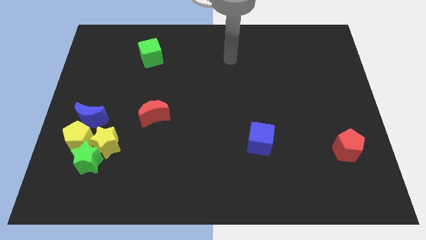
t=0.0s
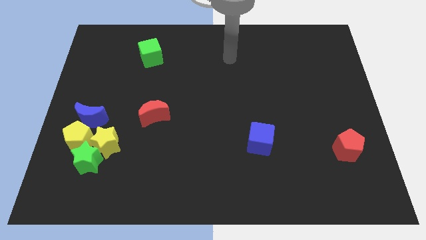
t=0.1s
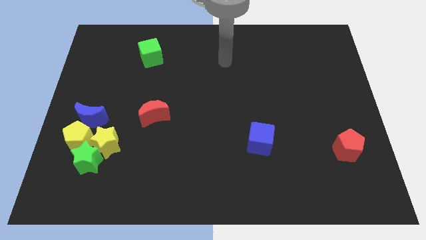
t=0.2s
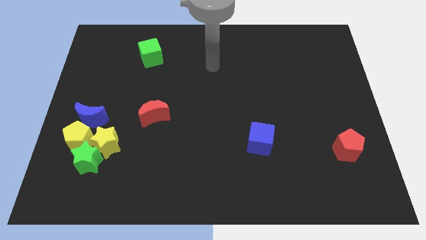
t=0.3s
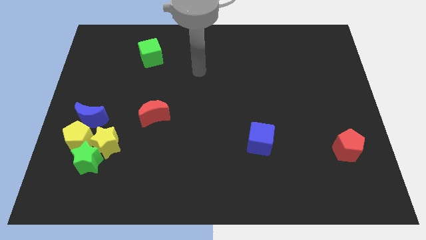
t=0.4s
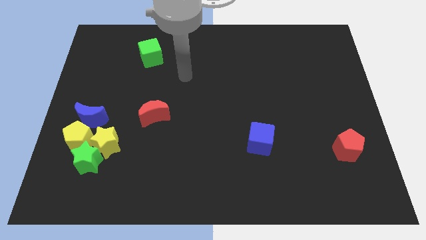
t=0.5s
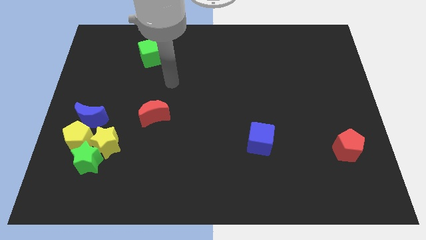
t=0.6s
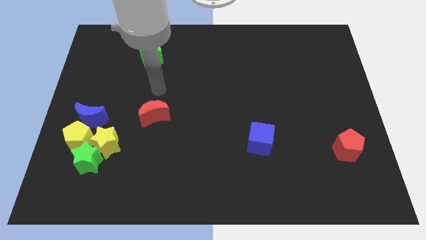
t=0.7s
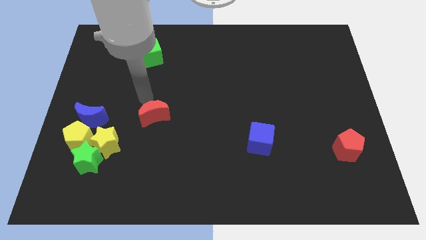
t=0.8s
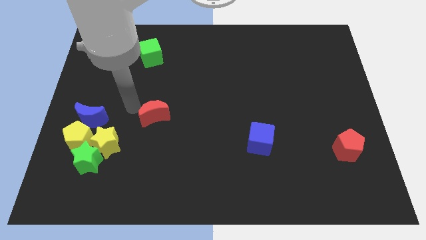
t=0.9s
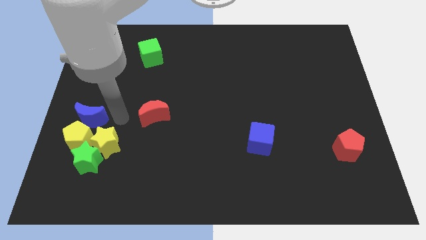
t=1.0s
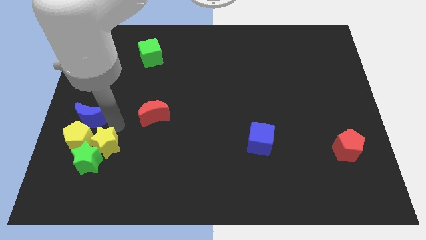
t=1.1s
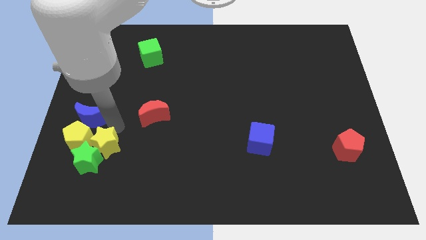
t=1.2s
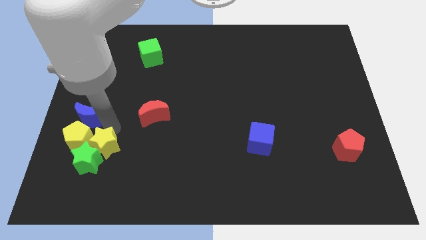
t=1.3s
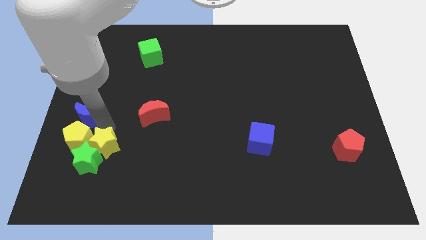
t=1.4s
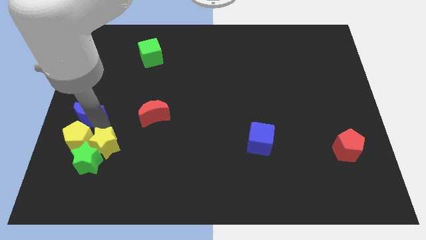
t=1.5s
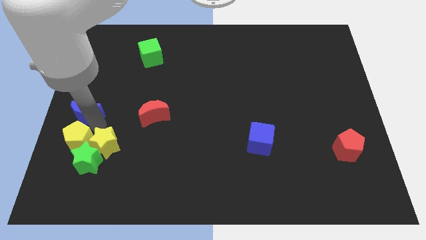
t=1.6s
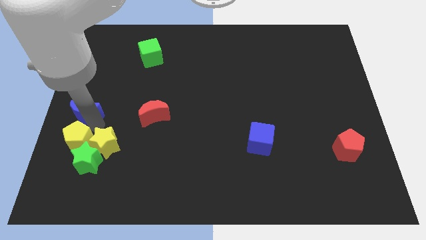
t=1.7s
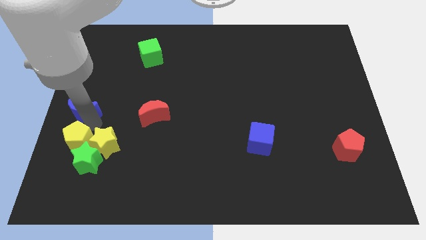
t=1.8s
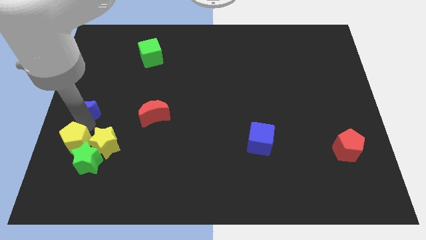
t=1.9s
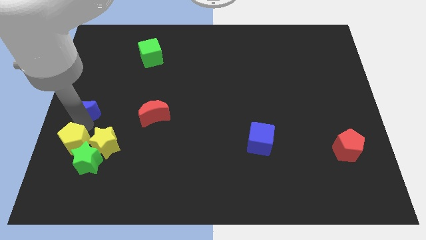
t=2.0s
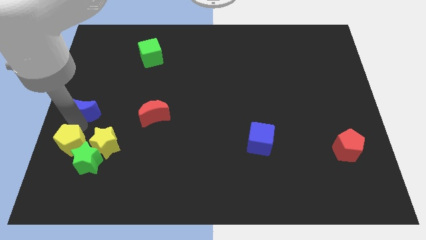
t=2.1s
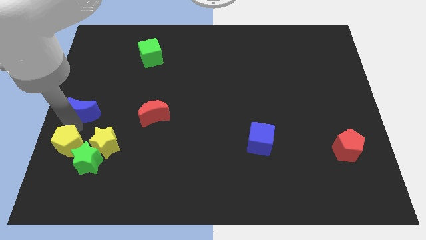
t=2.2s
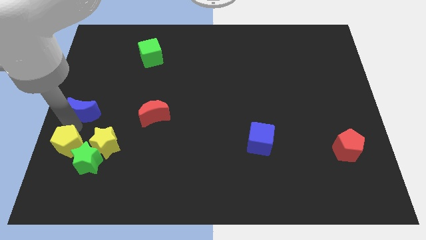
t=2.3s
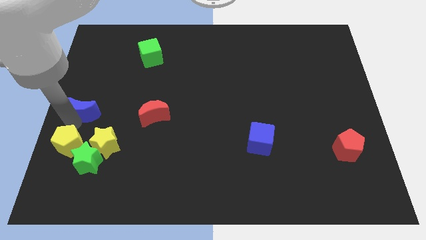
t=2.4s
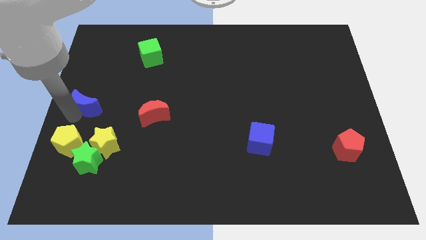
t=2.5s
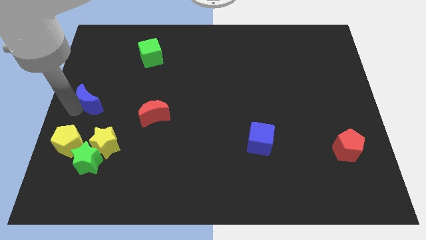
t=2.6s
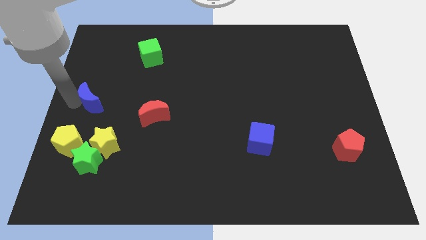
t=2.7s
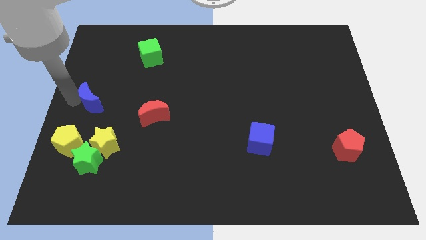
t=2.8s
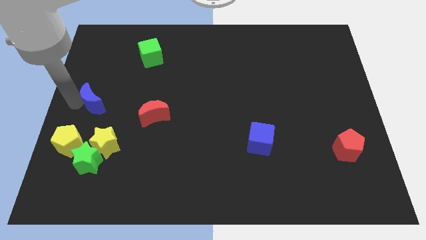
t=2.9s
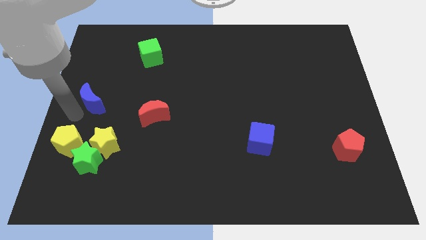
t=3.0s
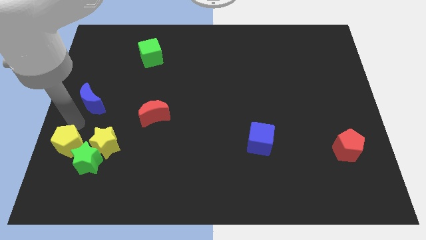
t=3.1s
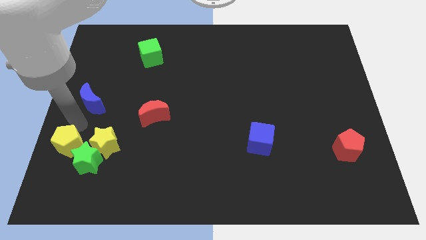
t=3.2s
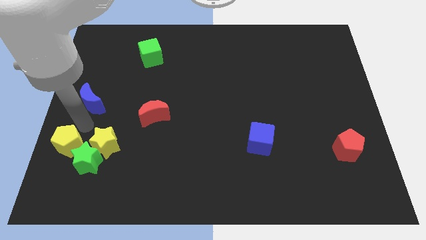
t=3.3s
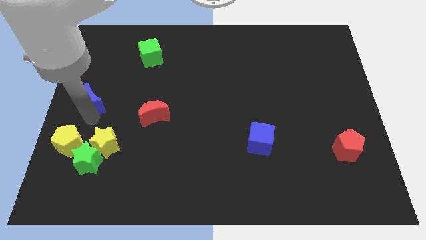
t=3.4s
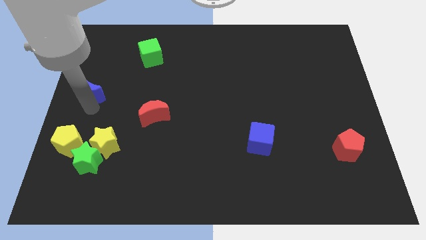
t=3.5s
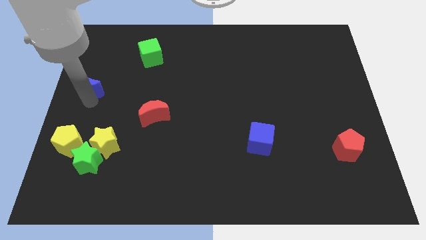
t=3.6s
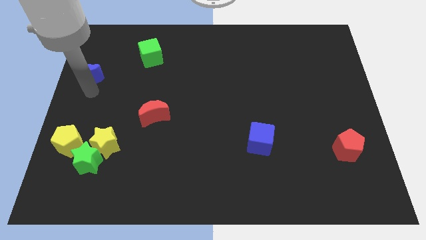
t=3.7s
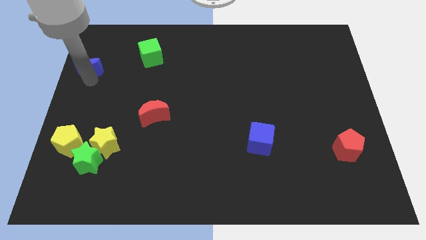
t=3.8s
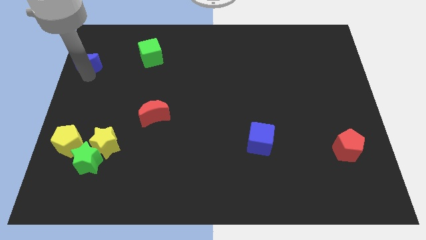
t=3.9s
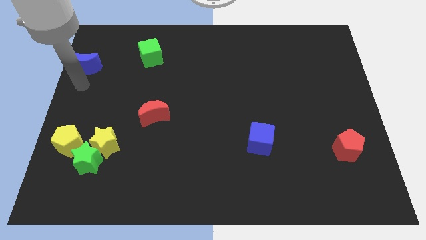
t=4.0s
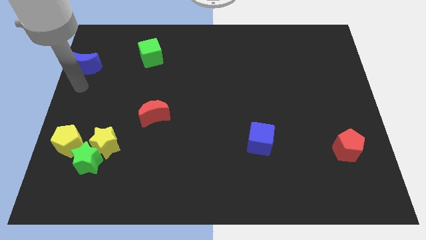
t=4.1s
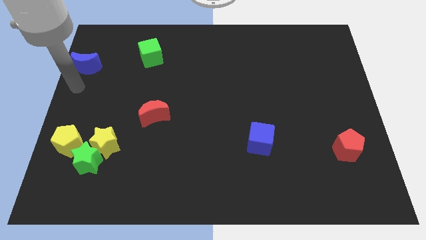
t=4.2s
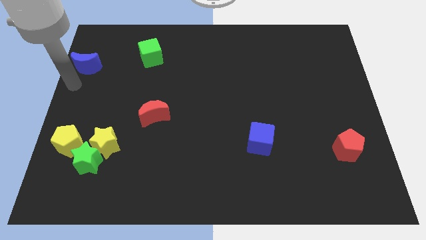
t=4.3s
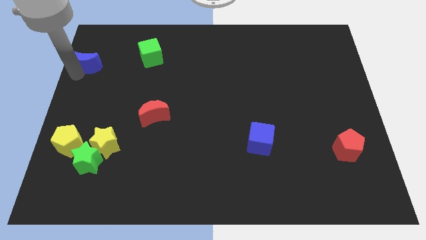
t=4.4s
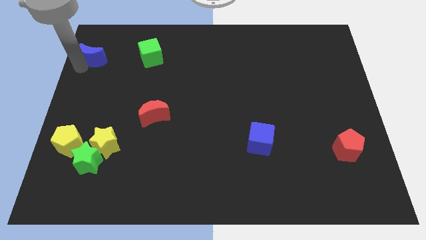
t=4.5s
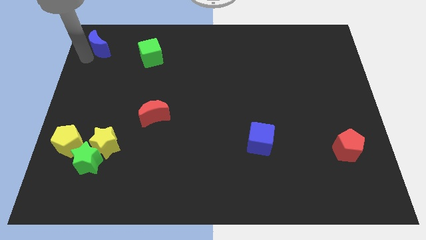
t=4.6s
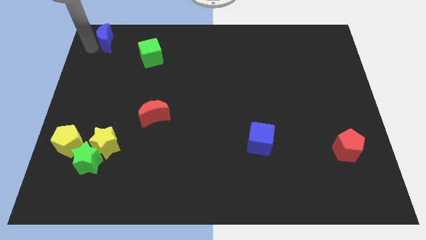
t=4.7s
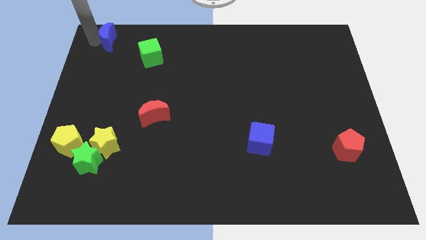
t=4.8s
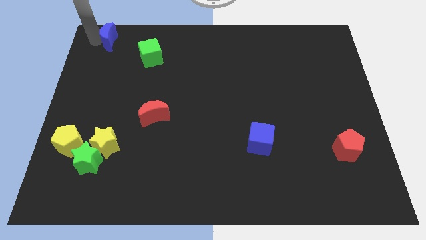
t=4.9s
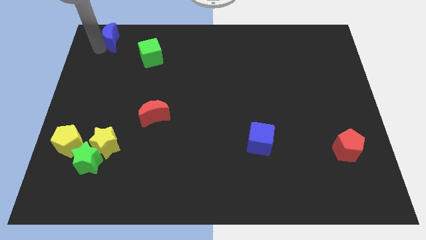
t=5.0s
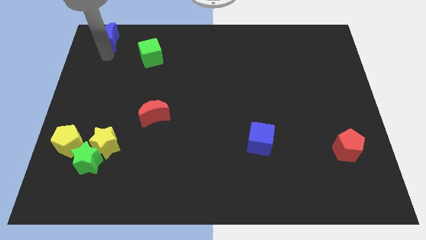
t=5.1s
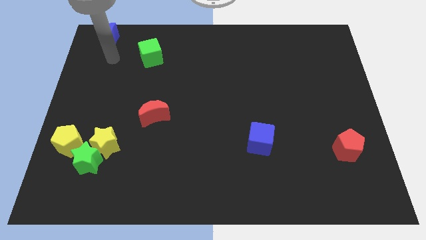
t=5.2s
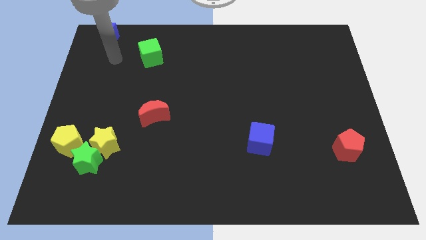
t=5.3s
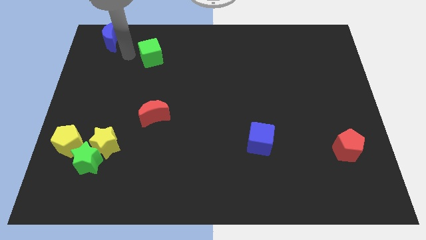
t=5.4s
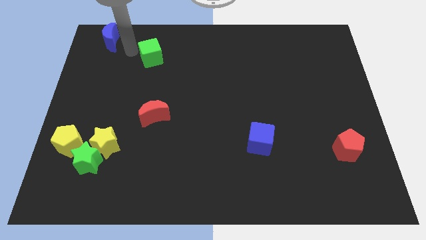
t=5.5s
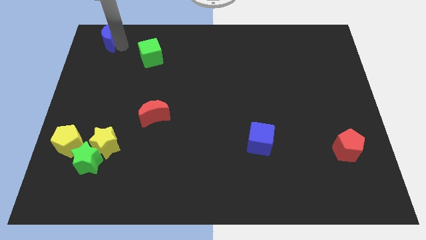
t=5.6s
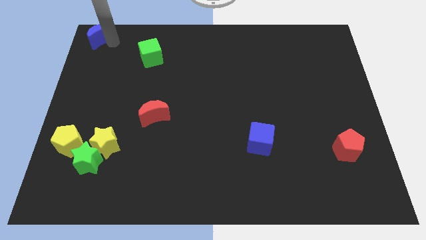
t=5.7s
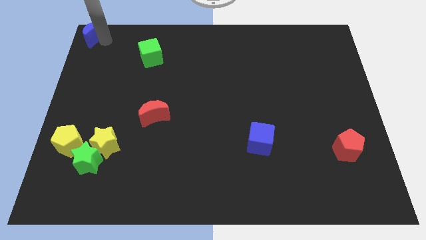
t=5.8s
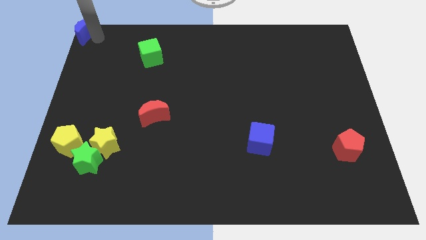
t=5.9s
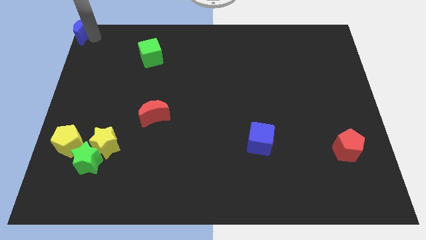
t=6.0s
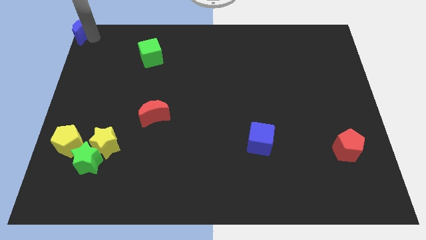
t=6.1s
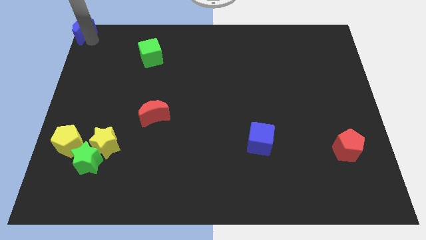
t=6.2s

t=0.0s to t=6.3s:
push the blue crescent top left corner of the board

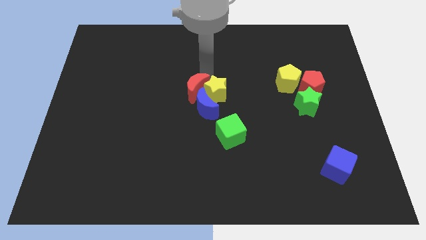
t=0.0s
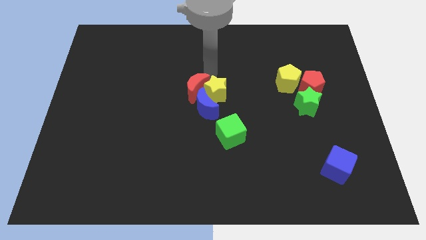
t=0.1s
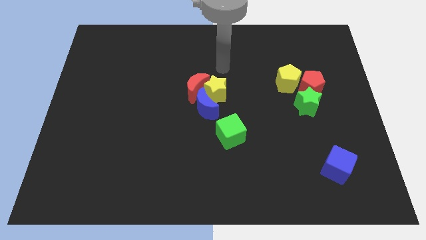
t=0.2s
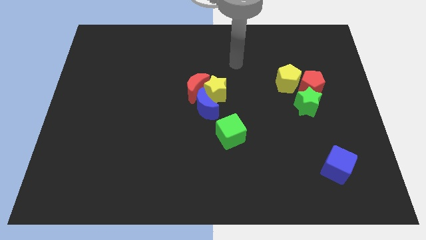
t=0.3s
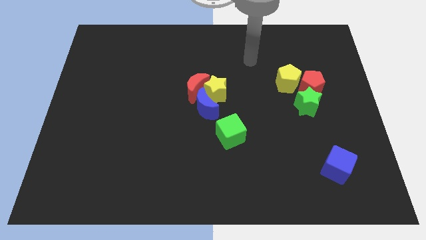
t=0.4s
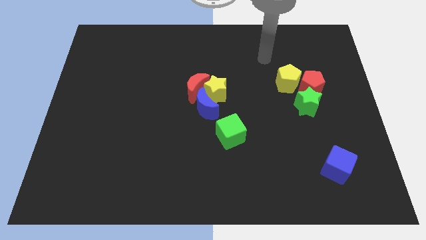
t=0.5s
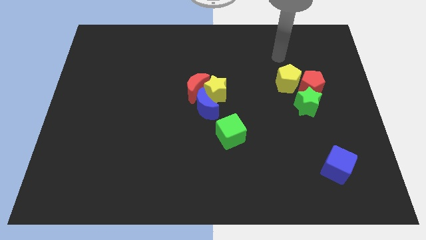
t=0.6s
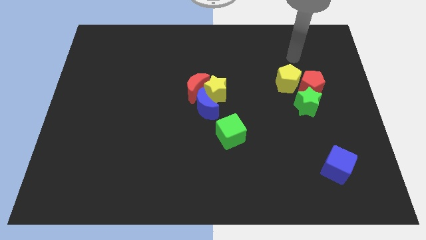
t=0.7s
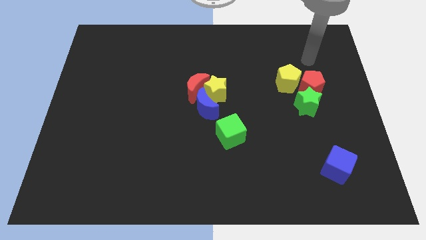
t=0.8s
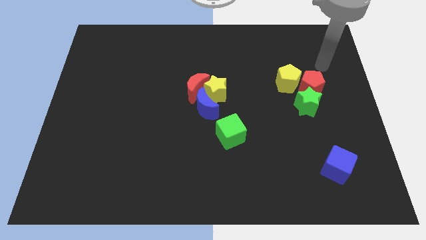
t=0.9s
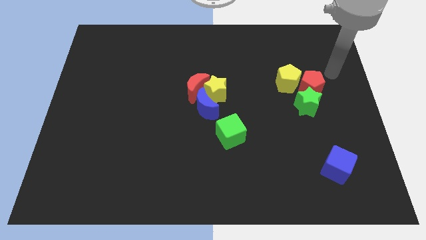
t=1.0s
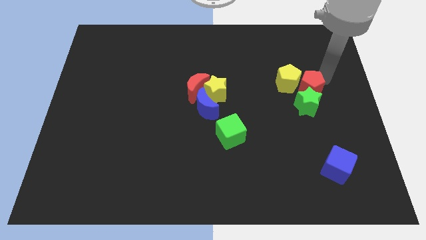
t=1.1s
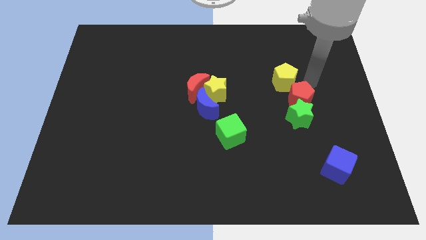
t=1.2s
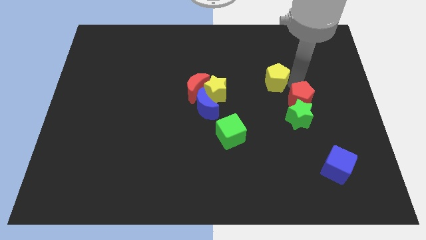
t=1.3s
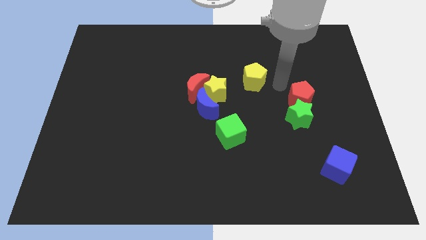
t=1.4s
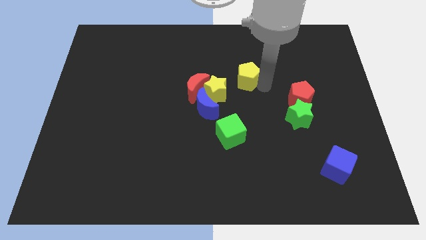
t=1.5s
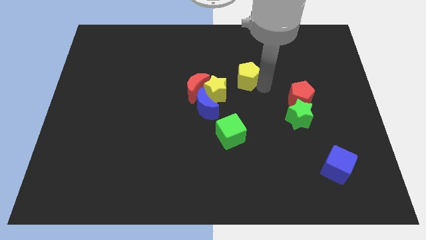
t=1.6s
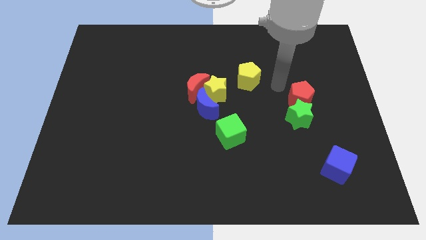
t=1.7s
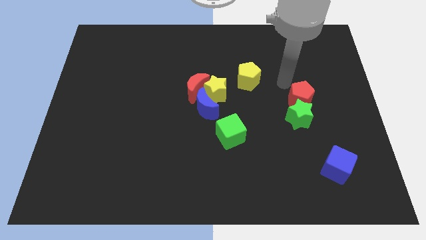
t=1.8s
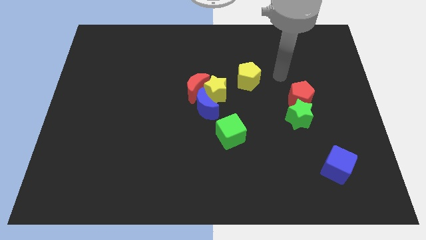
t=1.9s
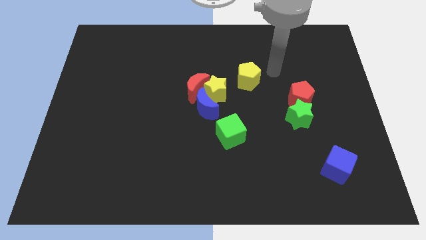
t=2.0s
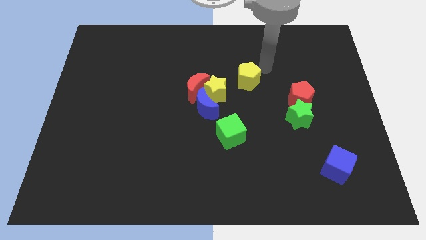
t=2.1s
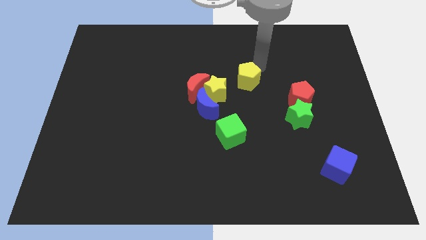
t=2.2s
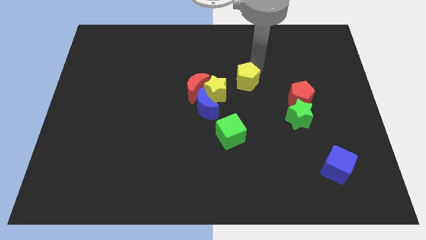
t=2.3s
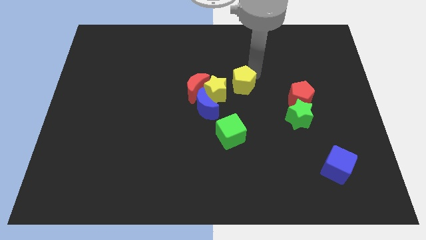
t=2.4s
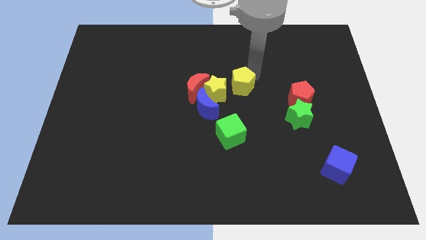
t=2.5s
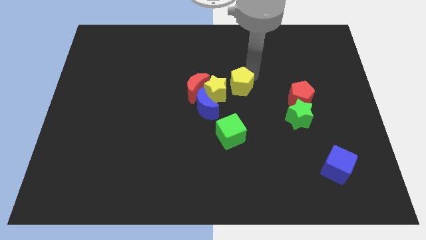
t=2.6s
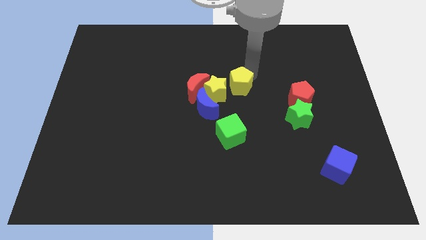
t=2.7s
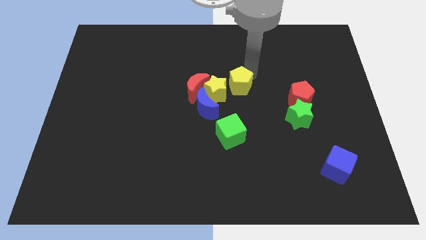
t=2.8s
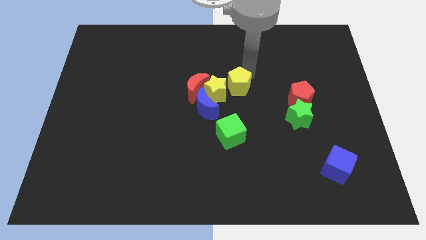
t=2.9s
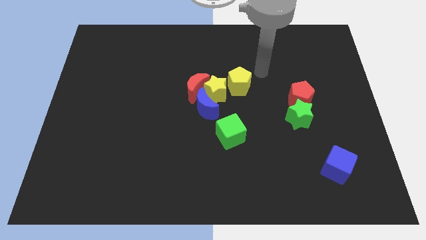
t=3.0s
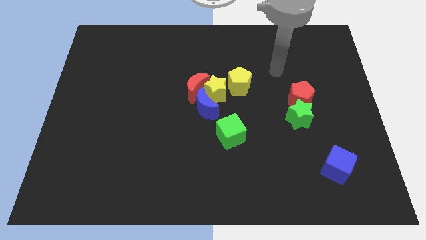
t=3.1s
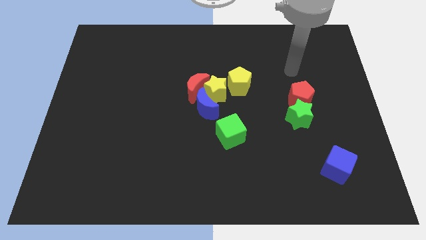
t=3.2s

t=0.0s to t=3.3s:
move the yellow pentagon close to the yellow star
